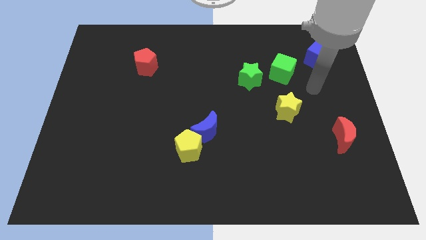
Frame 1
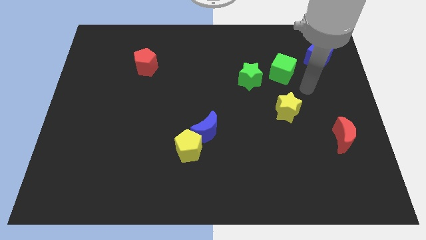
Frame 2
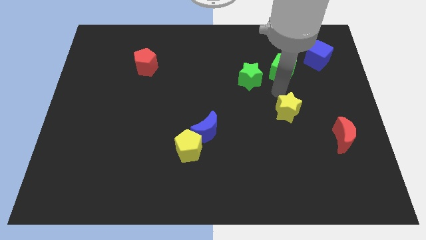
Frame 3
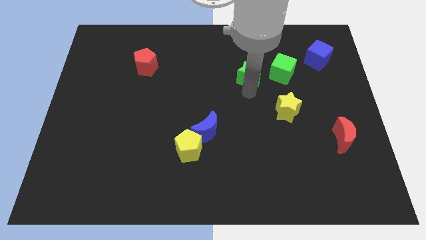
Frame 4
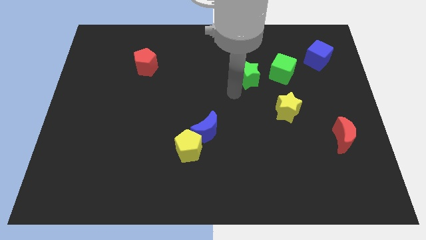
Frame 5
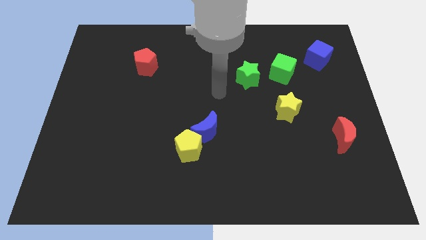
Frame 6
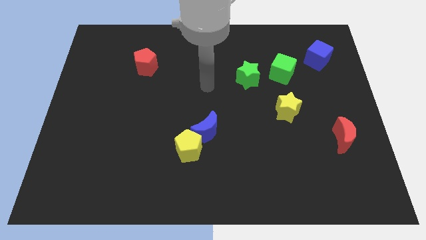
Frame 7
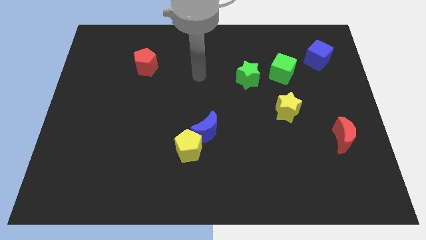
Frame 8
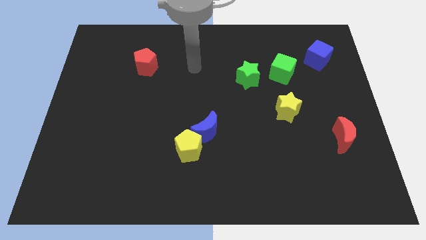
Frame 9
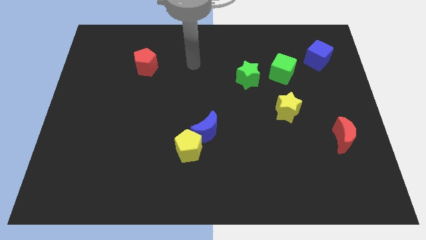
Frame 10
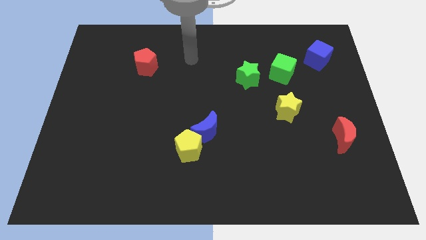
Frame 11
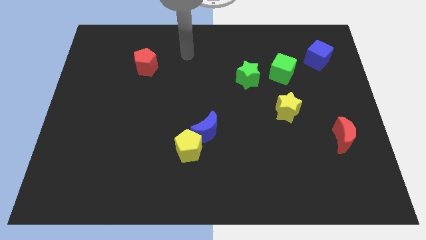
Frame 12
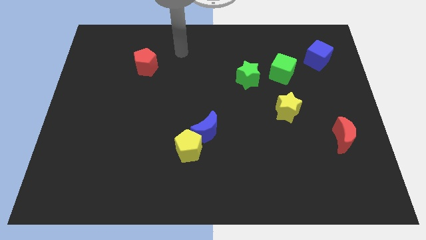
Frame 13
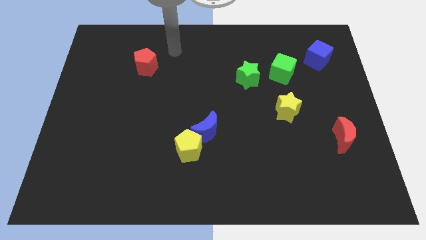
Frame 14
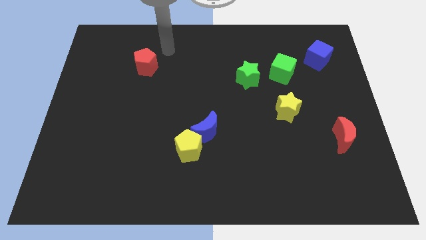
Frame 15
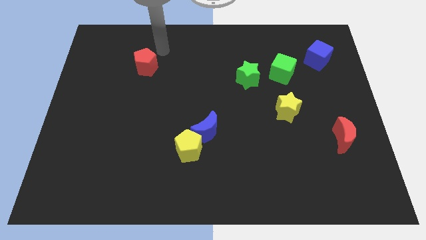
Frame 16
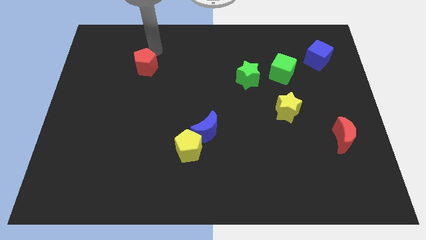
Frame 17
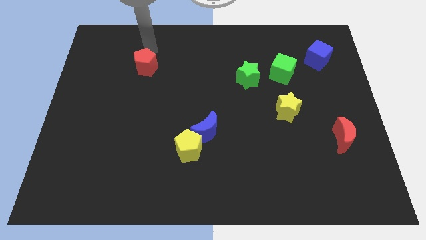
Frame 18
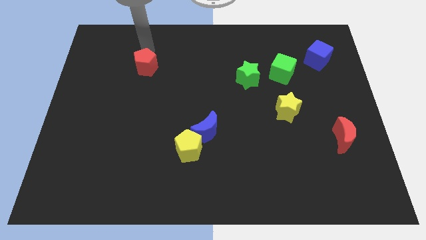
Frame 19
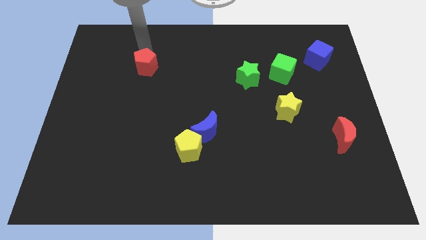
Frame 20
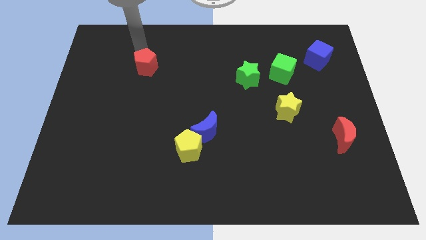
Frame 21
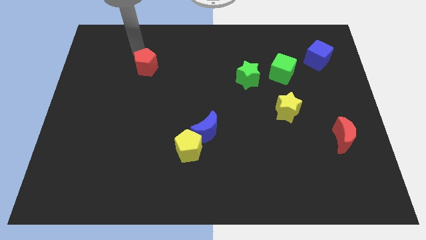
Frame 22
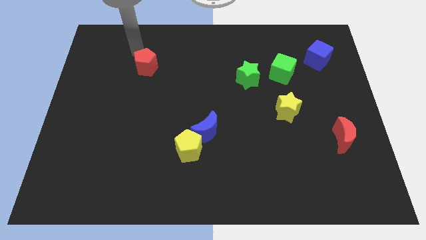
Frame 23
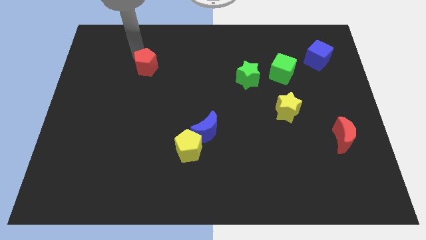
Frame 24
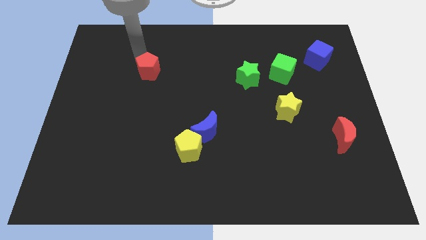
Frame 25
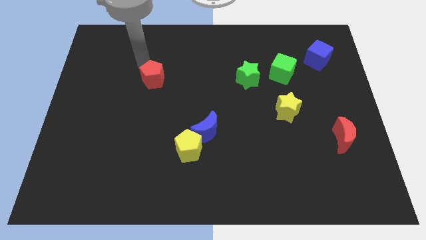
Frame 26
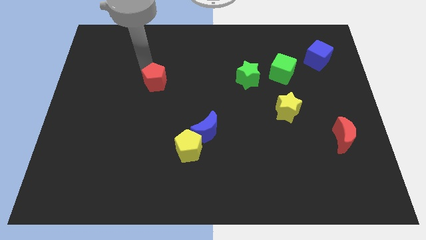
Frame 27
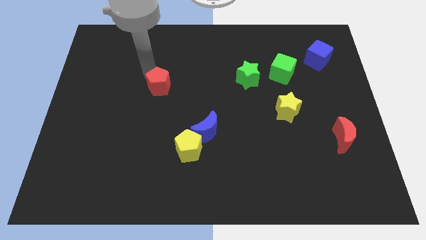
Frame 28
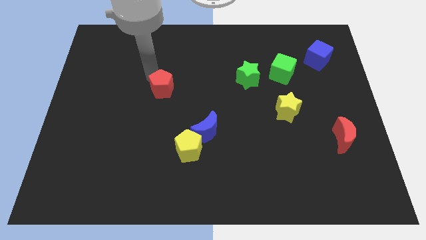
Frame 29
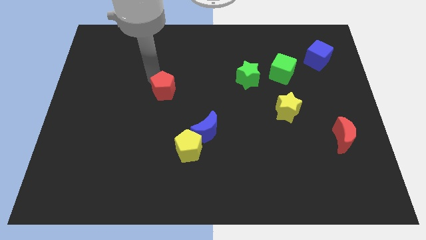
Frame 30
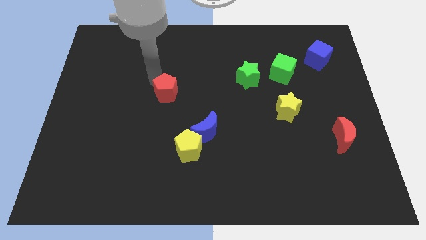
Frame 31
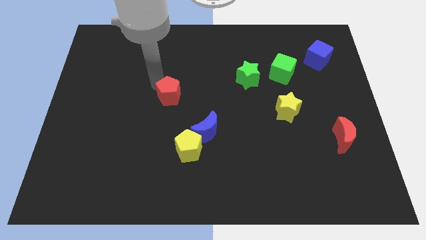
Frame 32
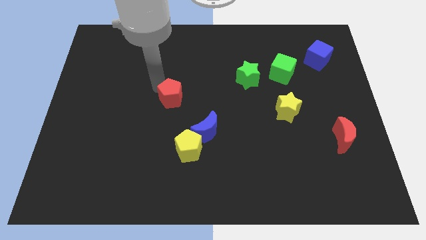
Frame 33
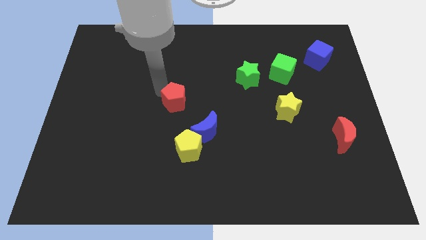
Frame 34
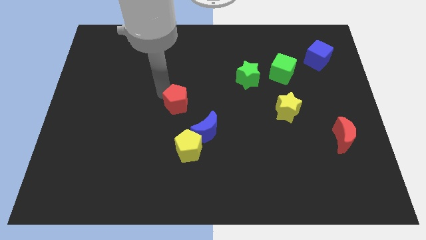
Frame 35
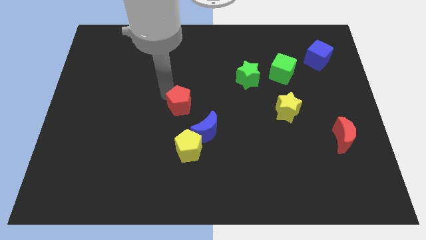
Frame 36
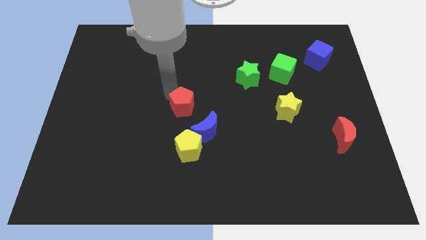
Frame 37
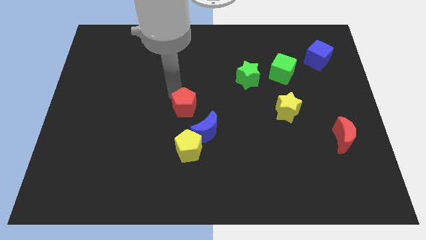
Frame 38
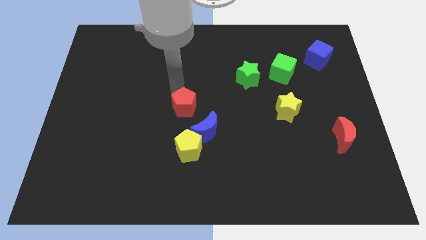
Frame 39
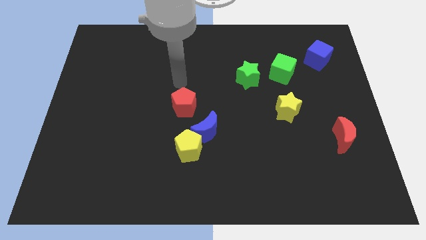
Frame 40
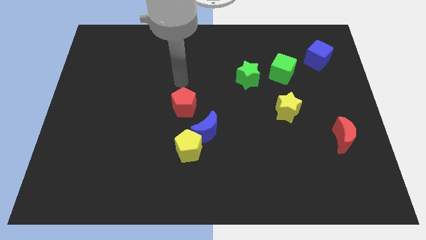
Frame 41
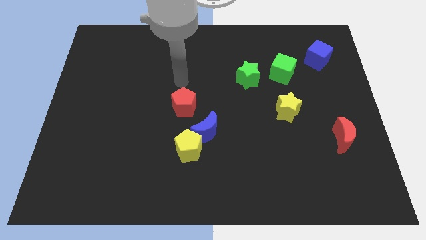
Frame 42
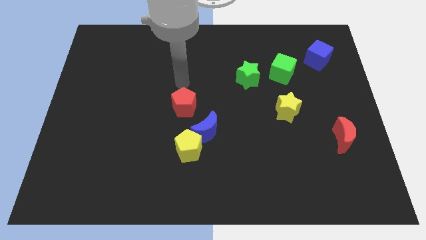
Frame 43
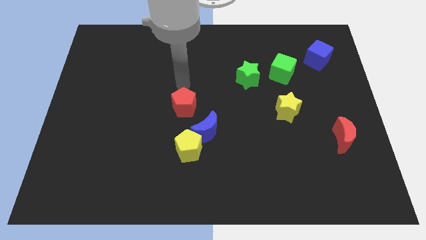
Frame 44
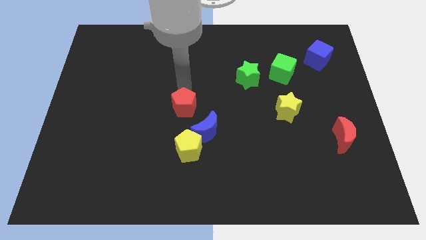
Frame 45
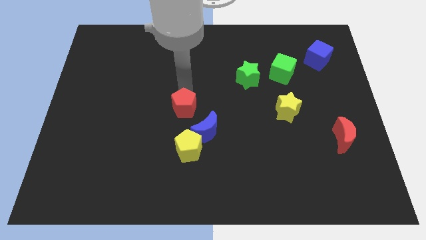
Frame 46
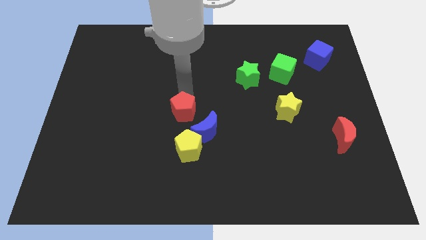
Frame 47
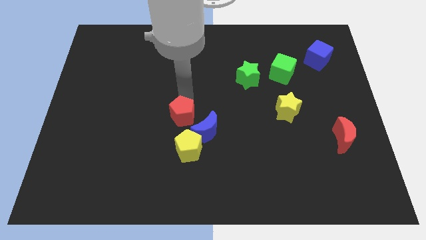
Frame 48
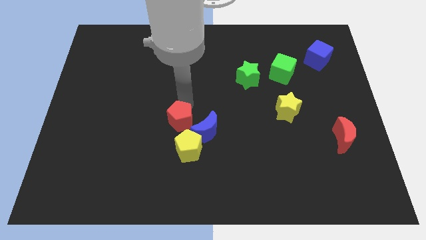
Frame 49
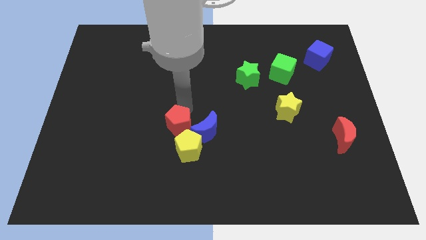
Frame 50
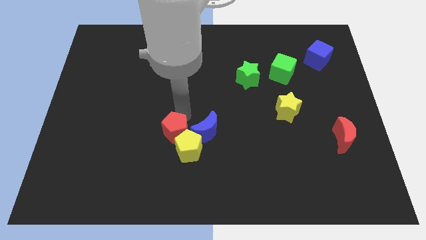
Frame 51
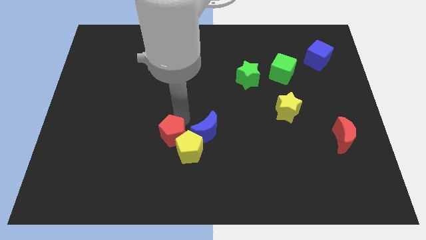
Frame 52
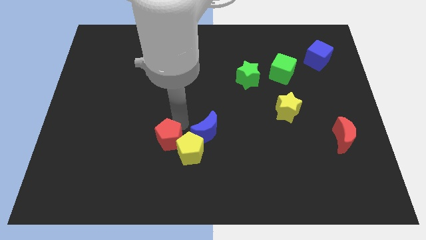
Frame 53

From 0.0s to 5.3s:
move the red pentagon to the yellow pentagon

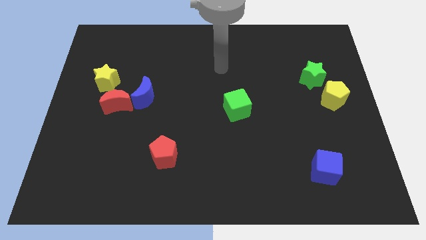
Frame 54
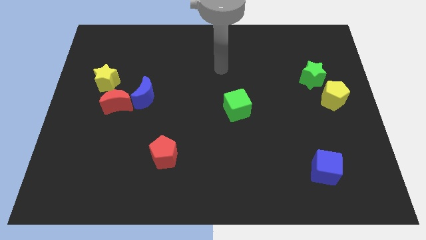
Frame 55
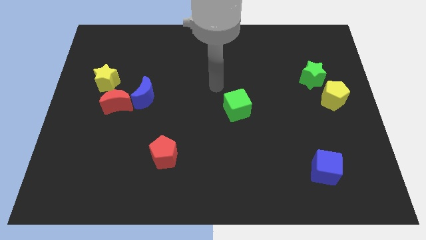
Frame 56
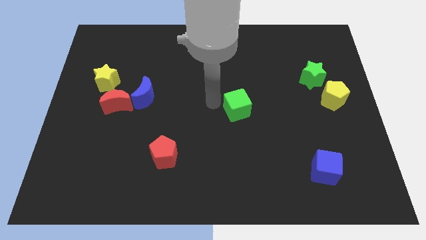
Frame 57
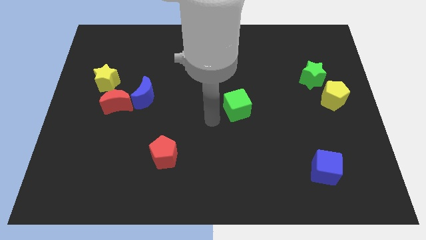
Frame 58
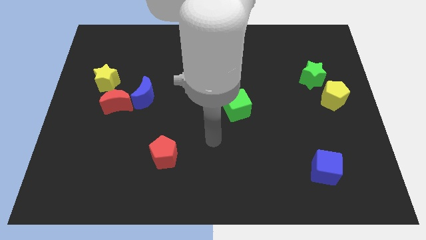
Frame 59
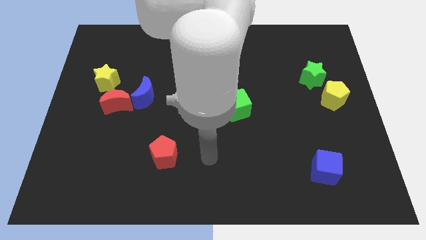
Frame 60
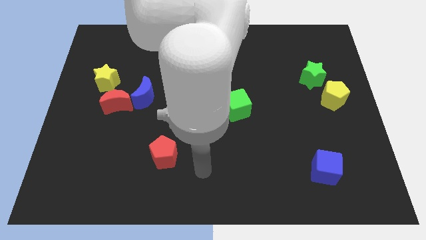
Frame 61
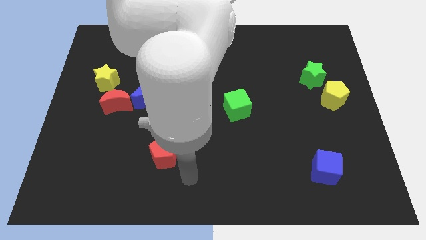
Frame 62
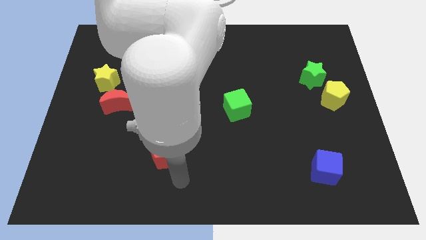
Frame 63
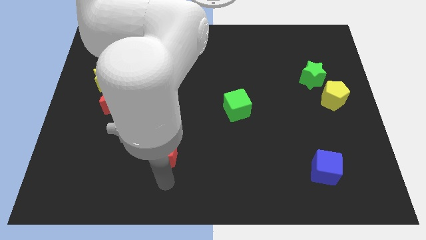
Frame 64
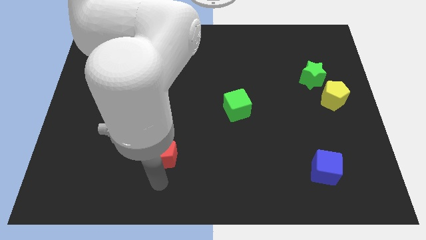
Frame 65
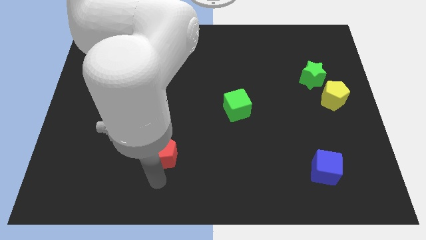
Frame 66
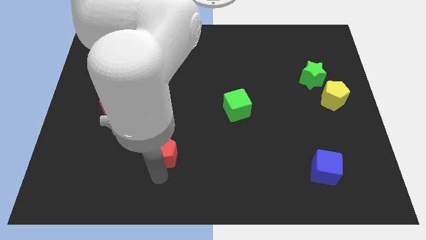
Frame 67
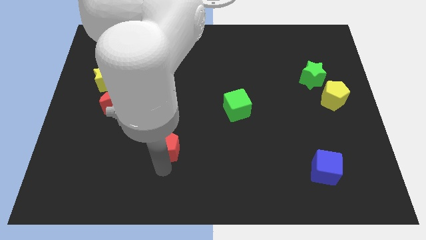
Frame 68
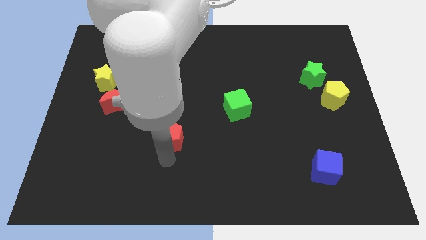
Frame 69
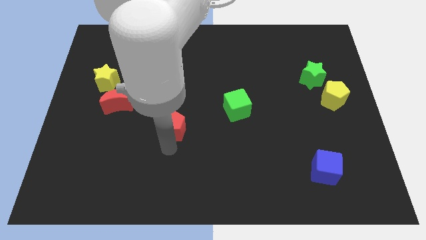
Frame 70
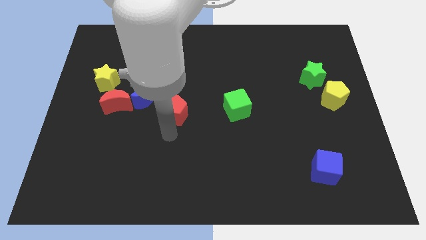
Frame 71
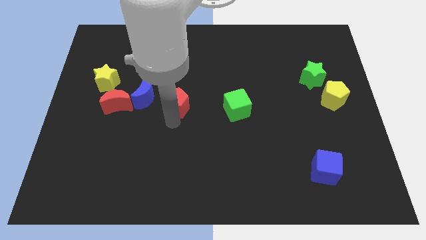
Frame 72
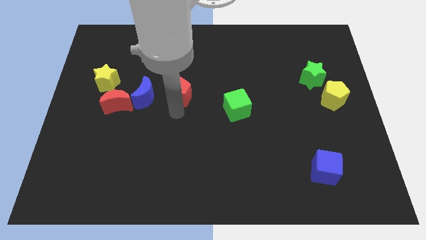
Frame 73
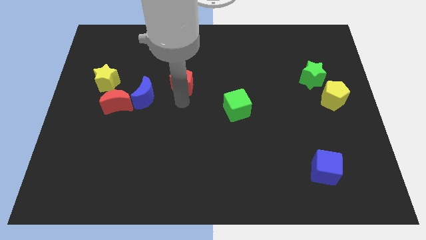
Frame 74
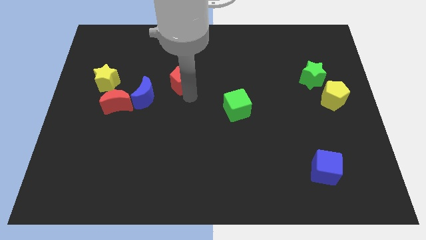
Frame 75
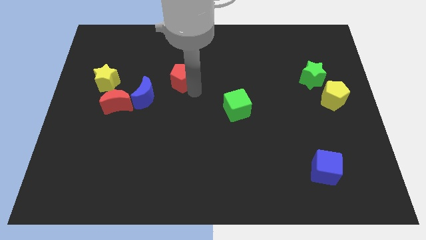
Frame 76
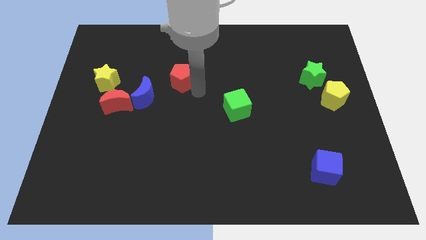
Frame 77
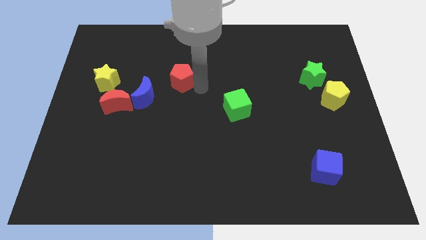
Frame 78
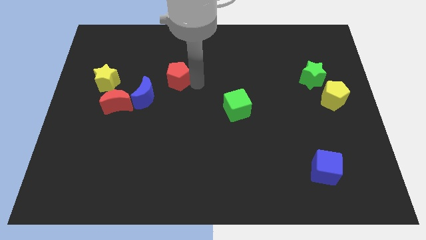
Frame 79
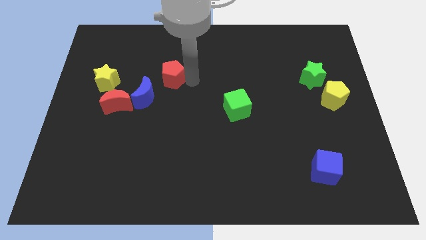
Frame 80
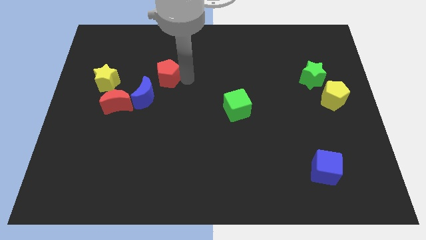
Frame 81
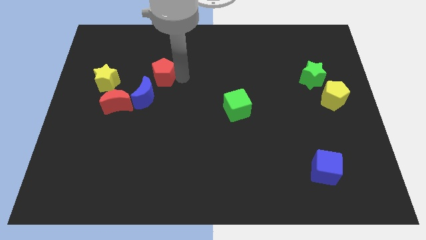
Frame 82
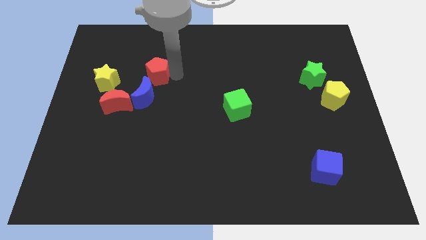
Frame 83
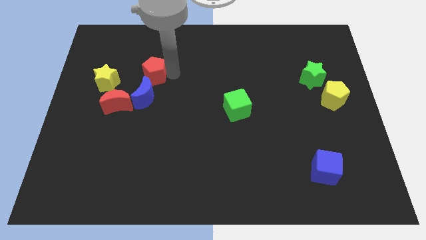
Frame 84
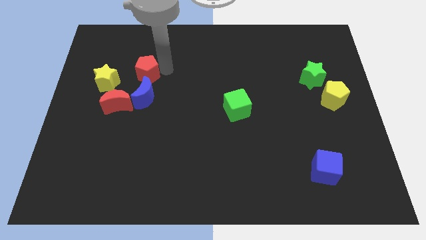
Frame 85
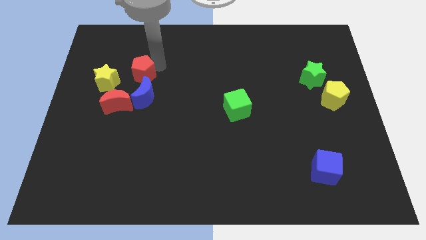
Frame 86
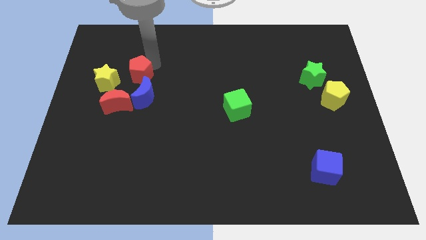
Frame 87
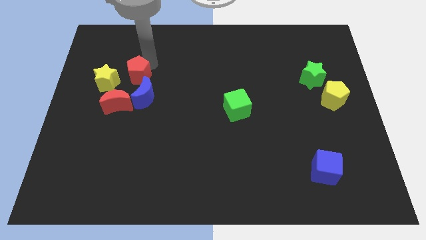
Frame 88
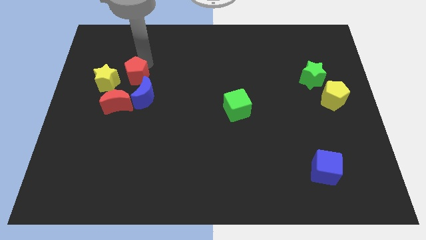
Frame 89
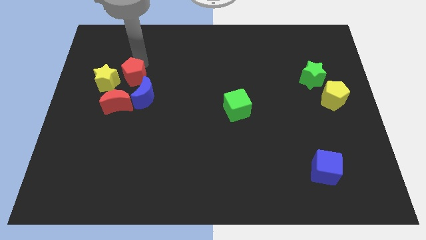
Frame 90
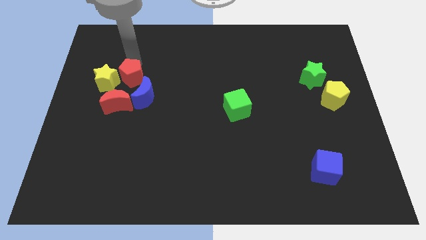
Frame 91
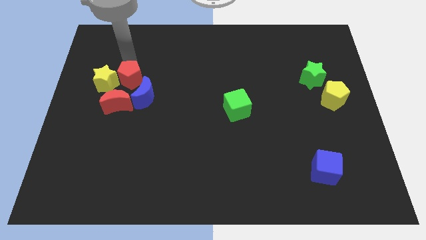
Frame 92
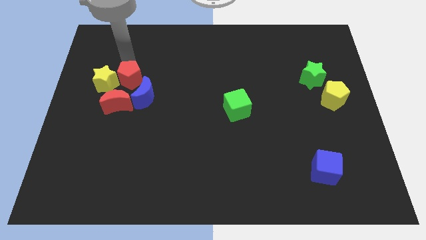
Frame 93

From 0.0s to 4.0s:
push the red pentagon towards the yellow star
